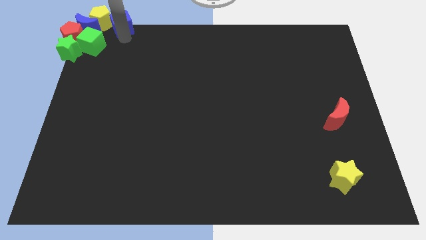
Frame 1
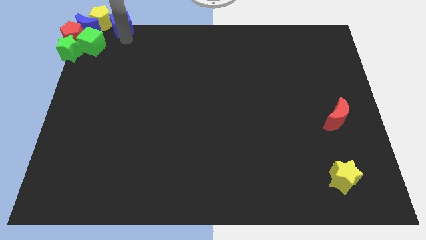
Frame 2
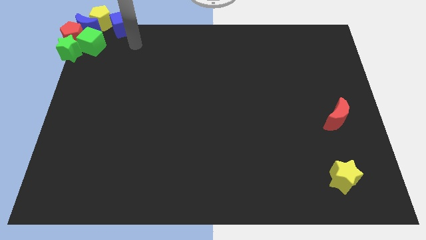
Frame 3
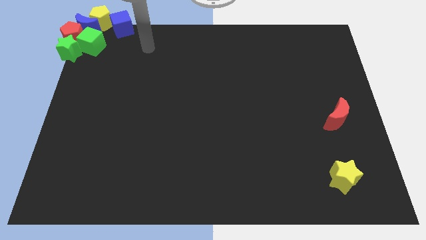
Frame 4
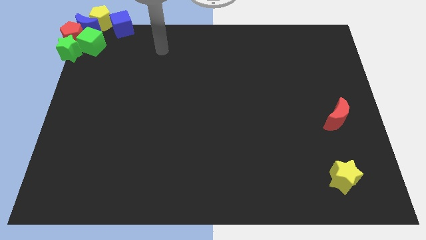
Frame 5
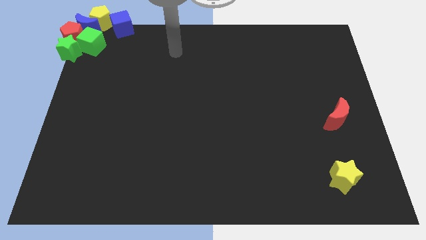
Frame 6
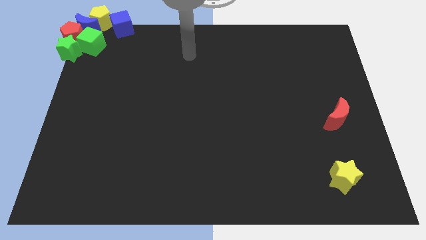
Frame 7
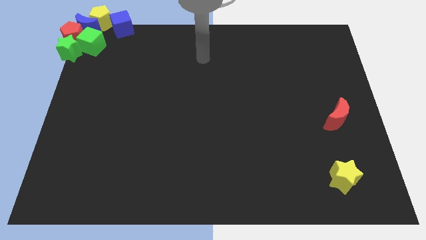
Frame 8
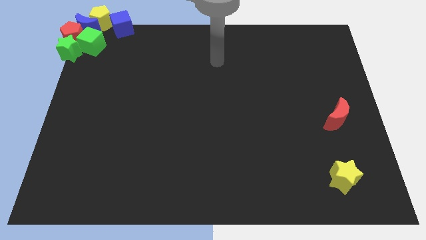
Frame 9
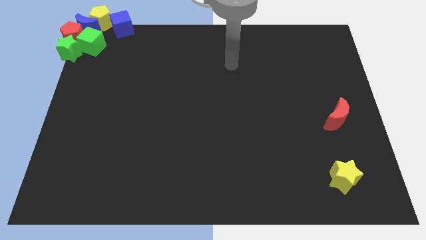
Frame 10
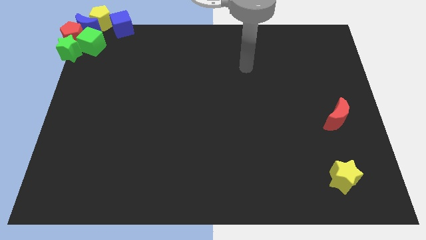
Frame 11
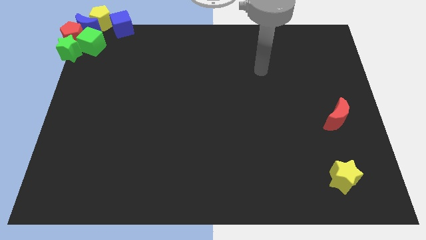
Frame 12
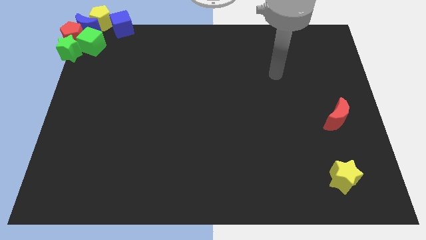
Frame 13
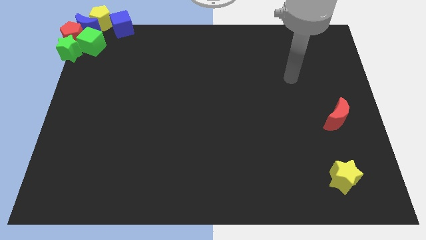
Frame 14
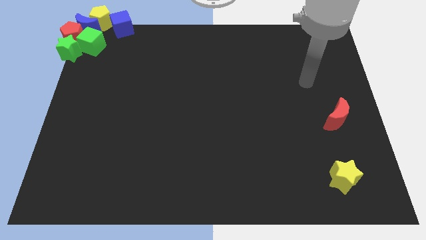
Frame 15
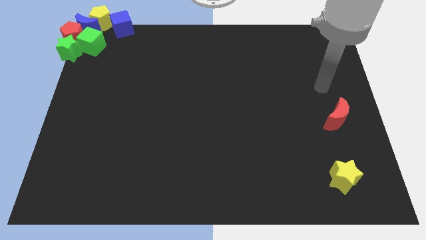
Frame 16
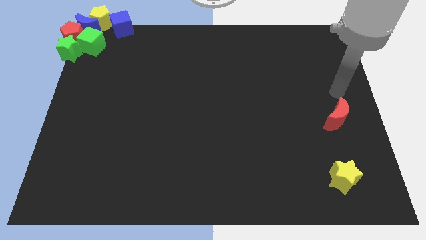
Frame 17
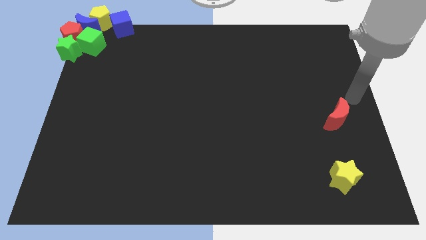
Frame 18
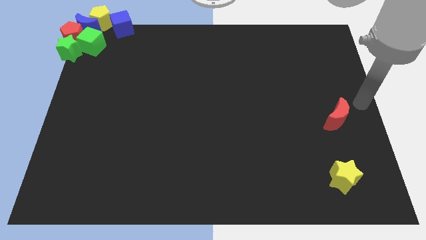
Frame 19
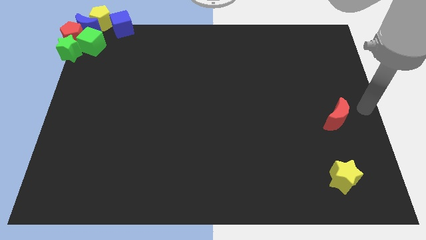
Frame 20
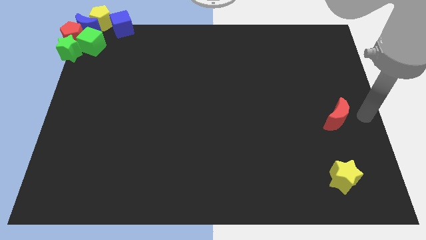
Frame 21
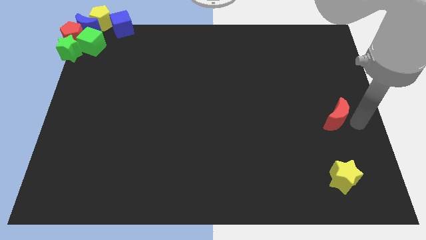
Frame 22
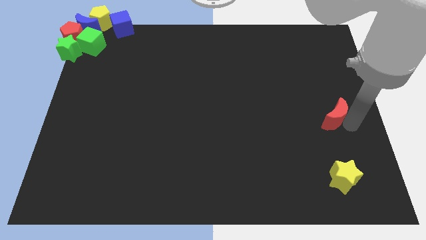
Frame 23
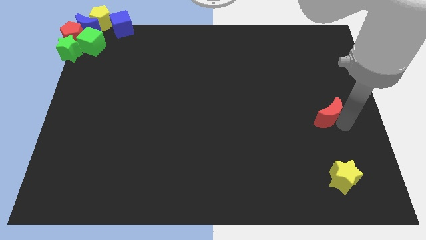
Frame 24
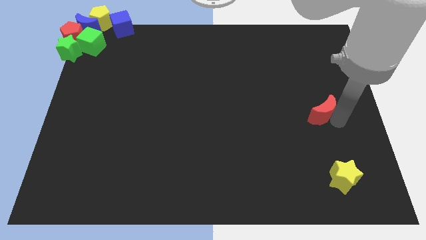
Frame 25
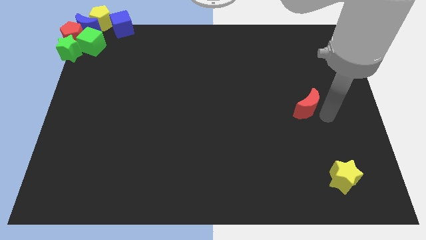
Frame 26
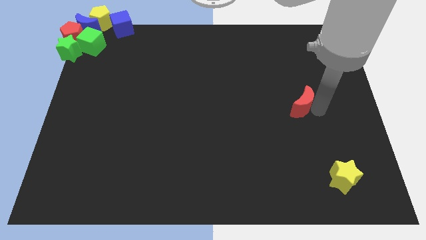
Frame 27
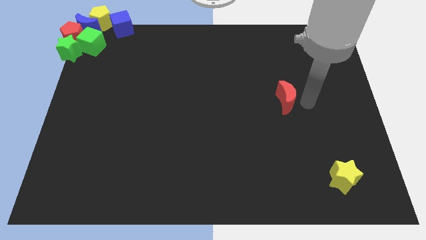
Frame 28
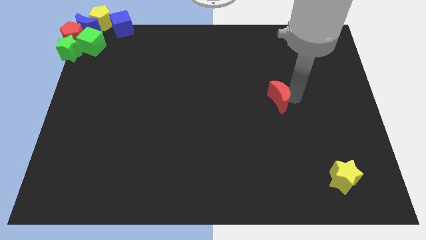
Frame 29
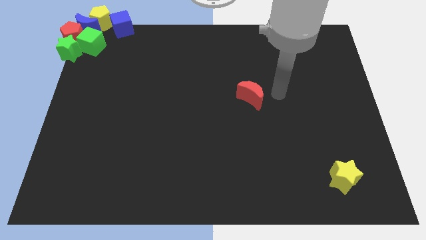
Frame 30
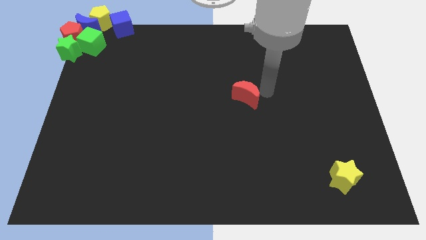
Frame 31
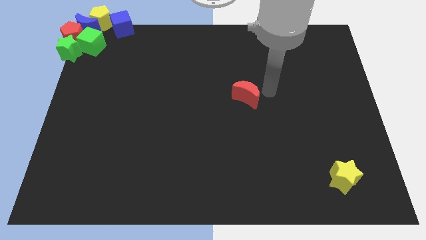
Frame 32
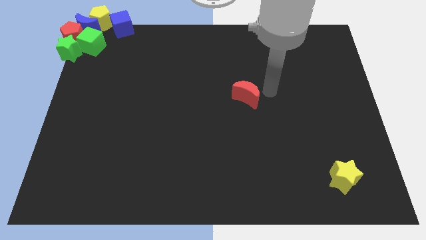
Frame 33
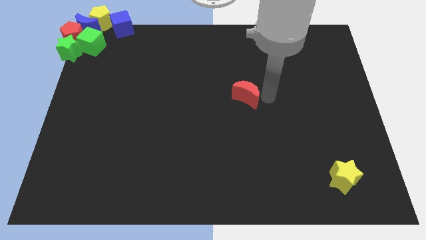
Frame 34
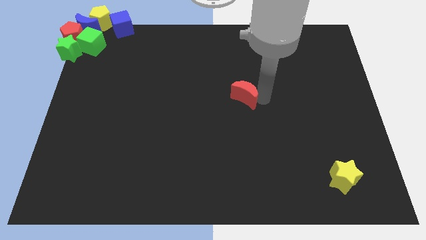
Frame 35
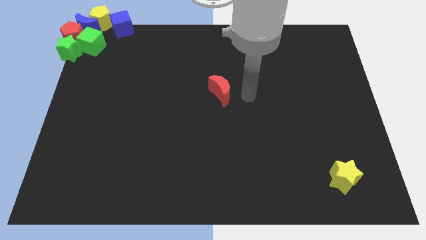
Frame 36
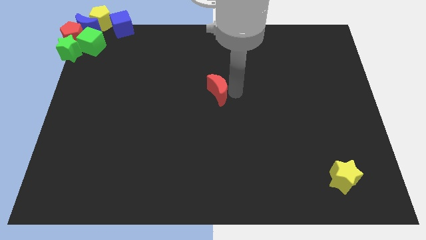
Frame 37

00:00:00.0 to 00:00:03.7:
place the red moon at the center of the board

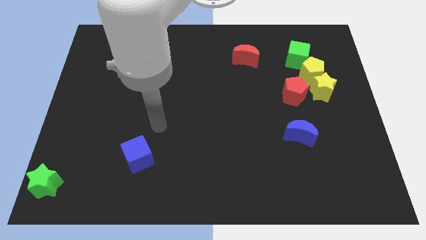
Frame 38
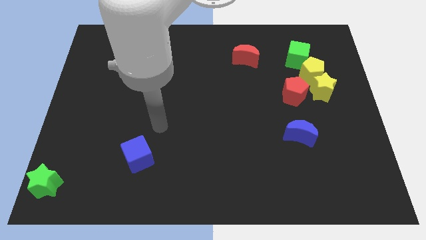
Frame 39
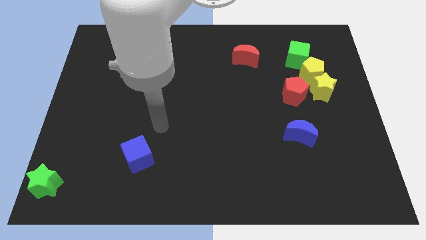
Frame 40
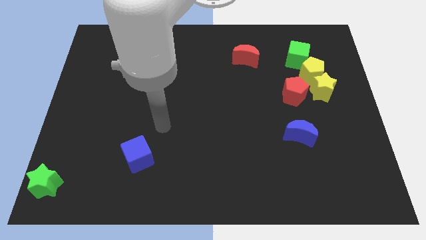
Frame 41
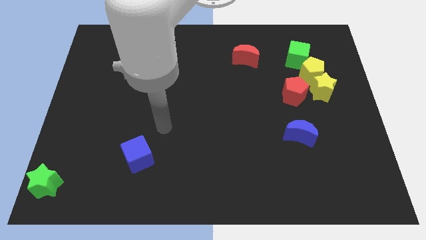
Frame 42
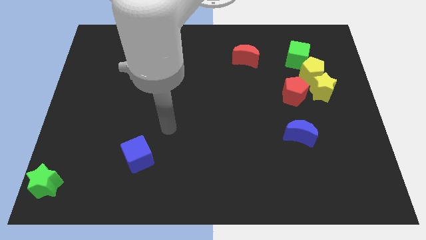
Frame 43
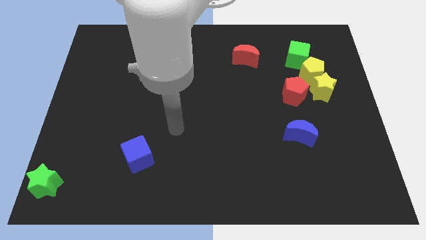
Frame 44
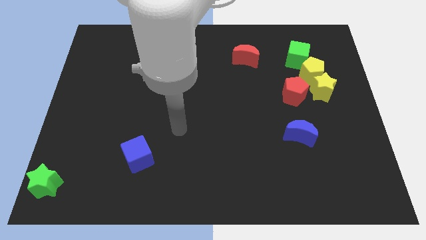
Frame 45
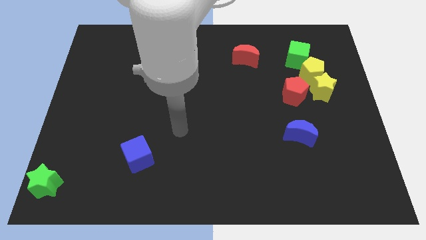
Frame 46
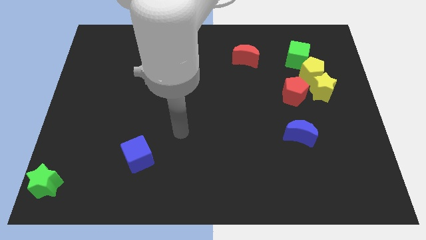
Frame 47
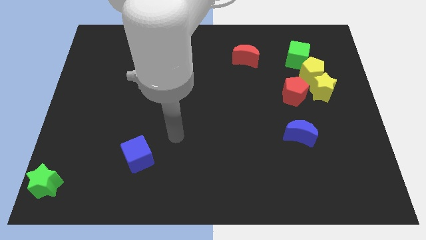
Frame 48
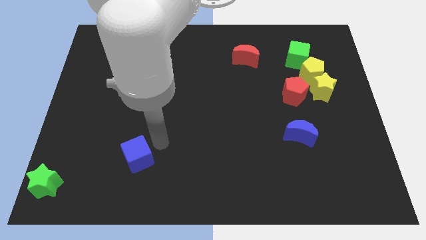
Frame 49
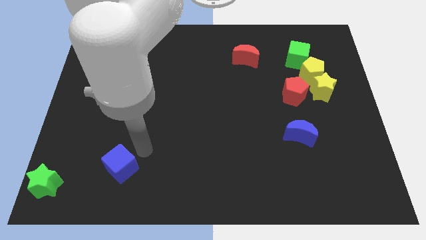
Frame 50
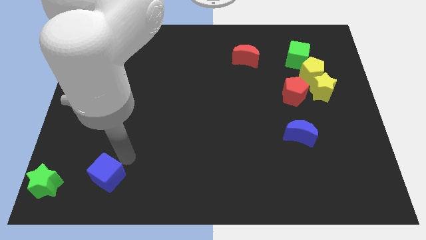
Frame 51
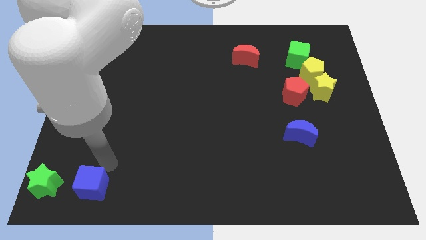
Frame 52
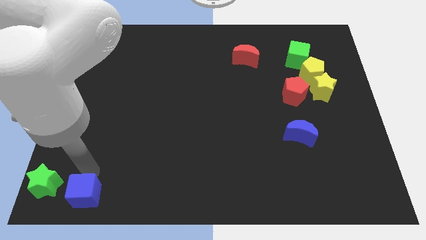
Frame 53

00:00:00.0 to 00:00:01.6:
move the blue cube to the right side of the green star

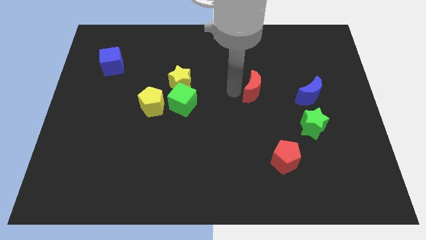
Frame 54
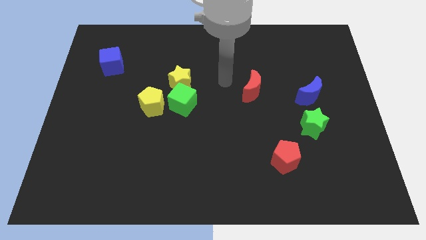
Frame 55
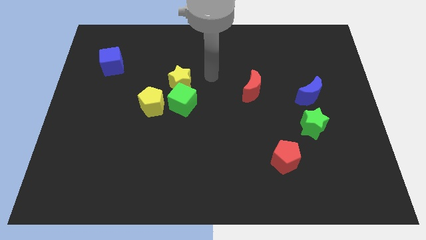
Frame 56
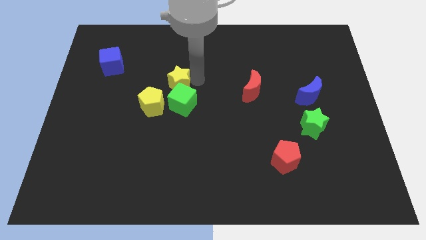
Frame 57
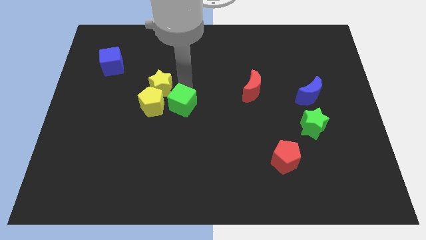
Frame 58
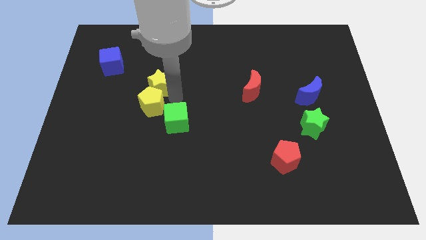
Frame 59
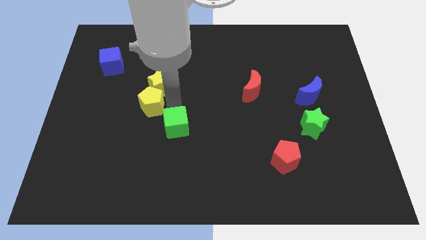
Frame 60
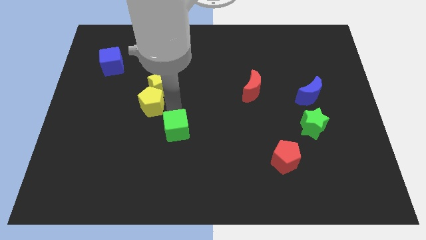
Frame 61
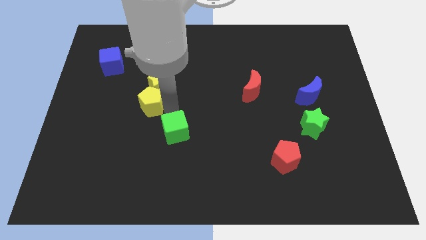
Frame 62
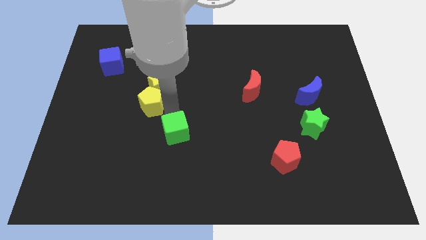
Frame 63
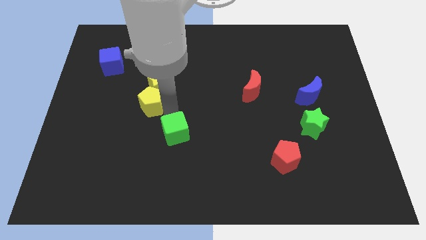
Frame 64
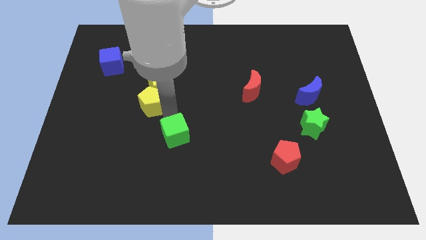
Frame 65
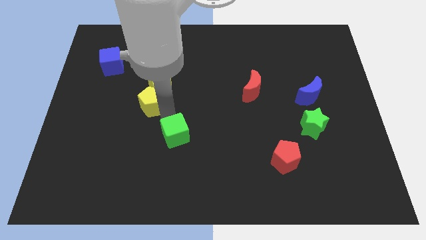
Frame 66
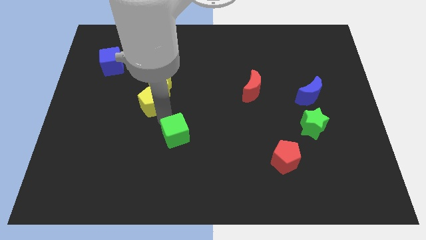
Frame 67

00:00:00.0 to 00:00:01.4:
separate the green cube from the yellow star

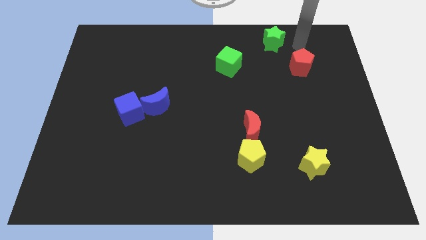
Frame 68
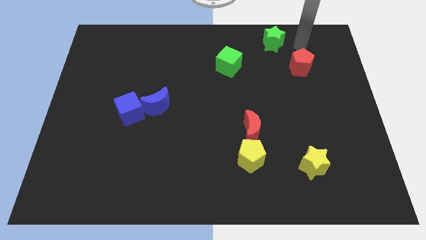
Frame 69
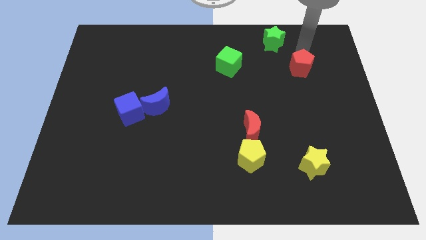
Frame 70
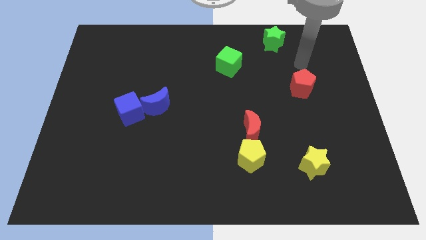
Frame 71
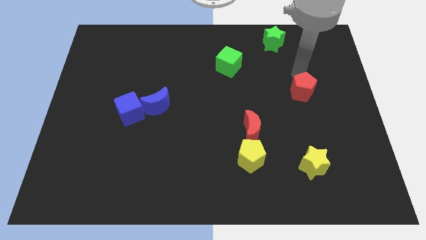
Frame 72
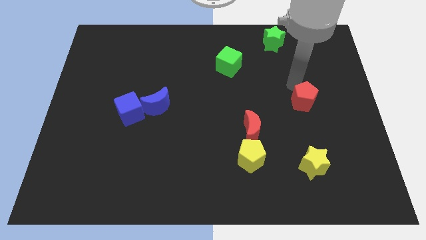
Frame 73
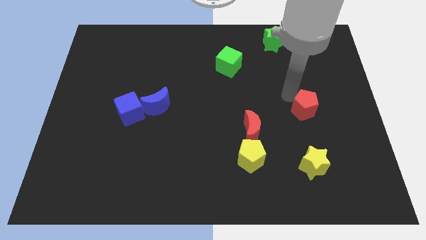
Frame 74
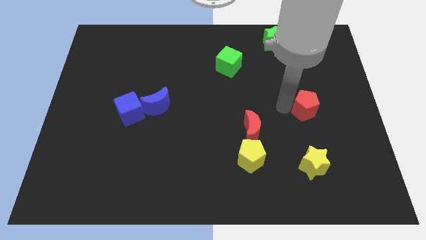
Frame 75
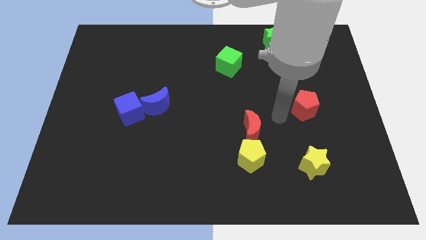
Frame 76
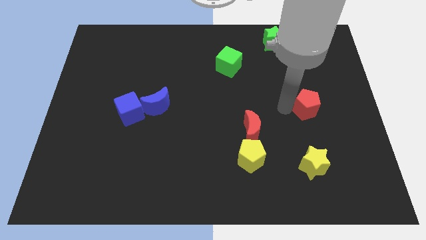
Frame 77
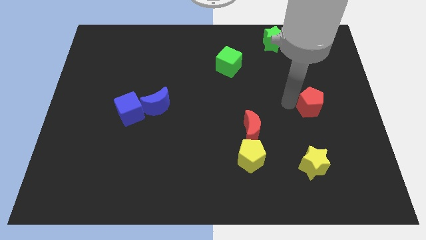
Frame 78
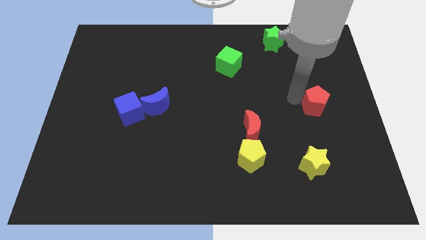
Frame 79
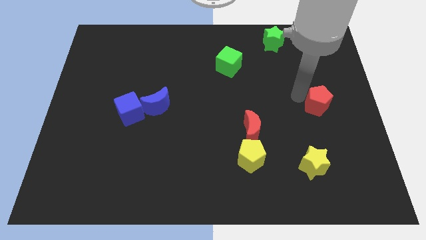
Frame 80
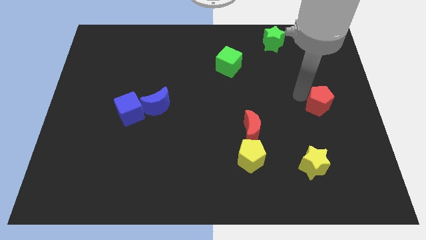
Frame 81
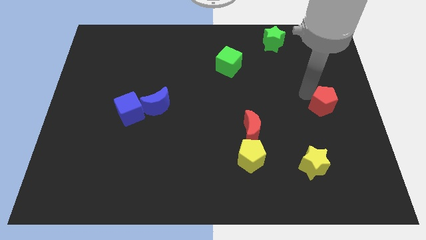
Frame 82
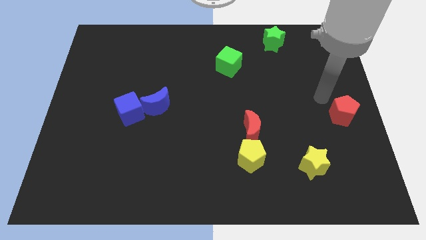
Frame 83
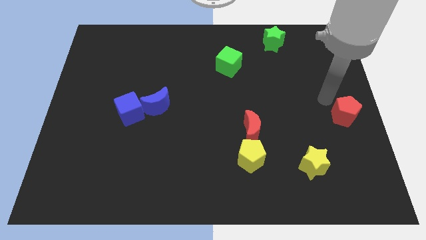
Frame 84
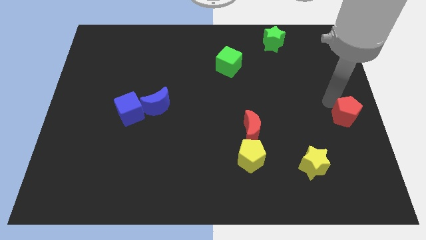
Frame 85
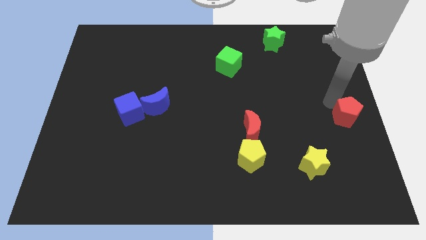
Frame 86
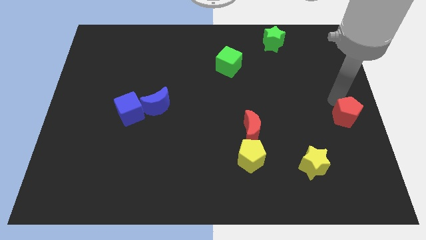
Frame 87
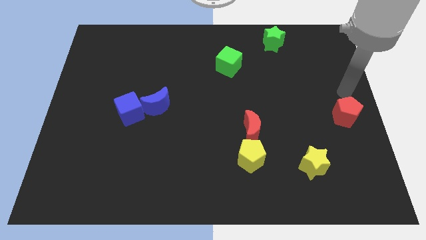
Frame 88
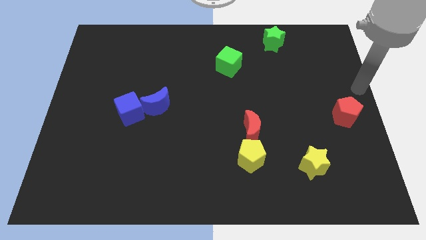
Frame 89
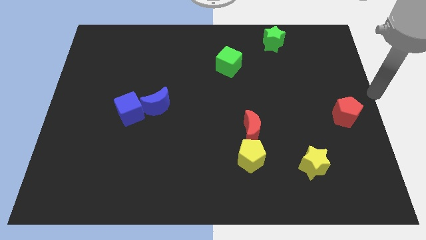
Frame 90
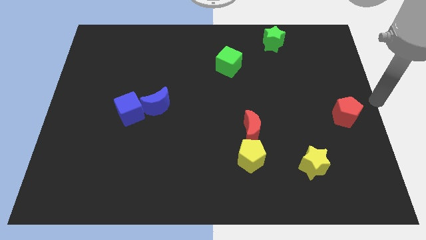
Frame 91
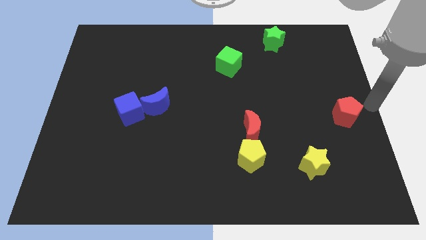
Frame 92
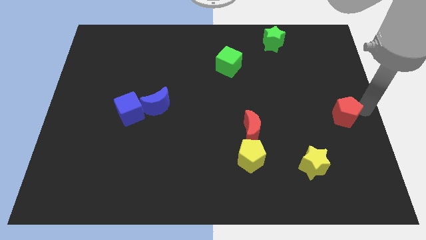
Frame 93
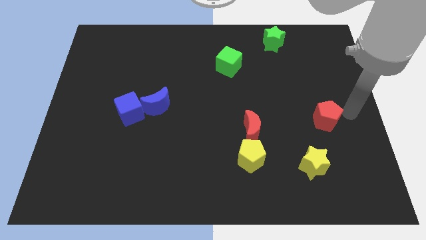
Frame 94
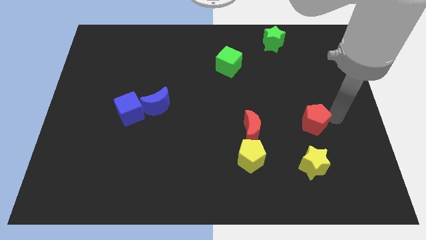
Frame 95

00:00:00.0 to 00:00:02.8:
push the red pentagon to the top of the yellow star
